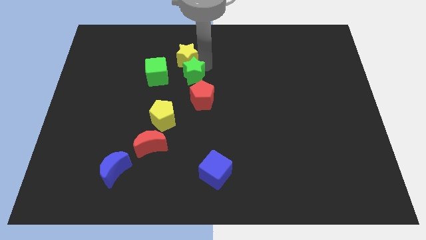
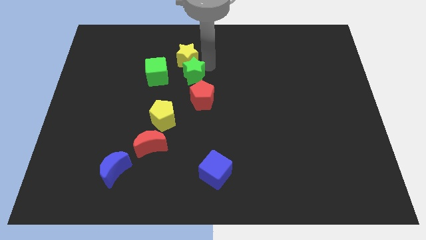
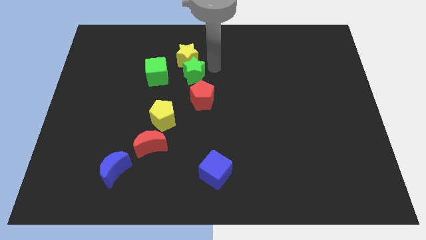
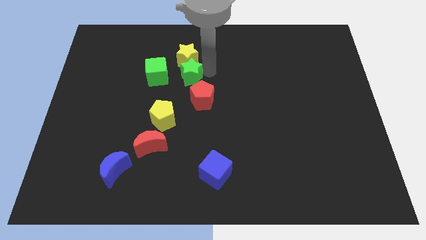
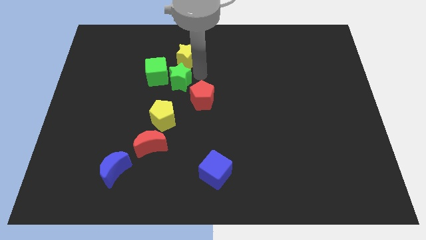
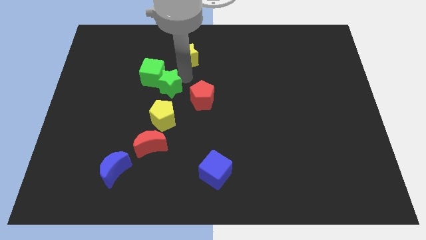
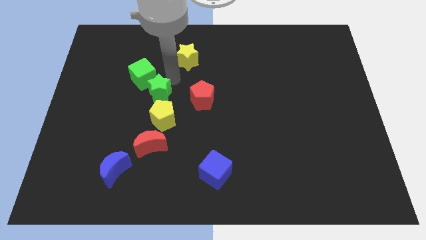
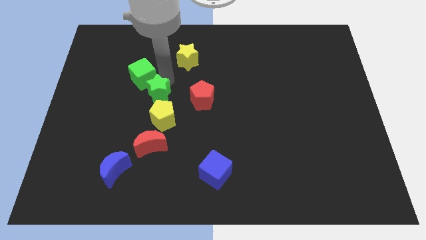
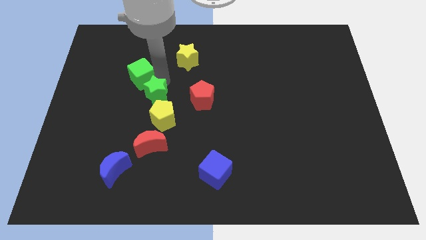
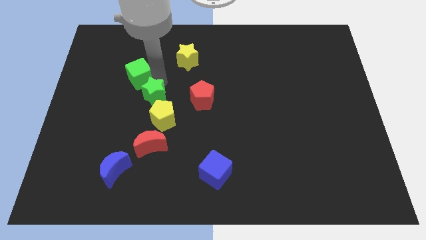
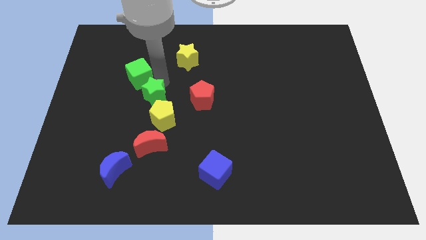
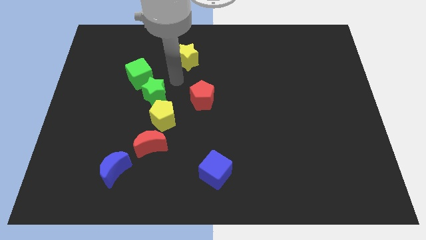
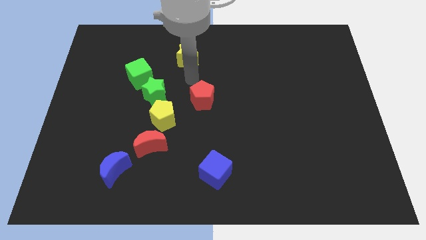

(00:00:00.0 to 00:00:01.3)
move the green star in between the green cube and yellow pentagon

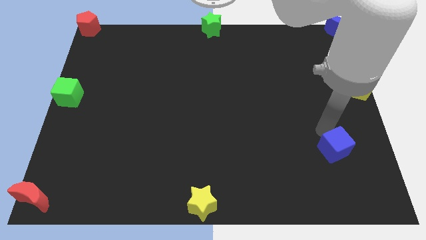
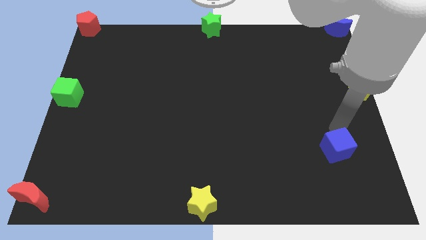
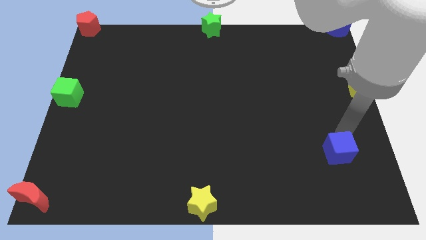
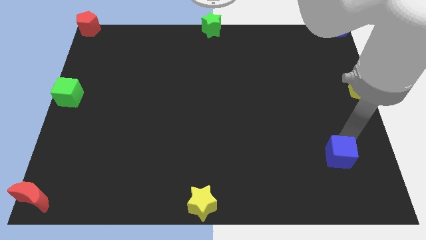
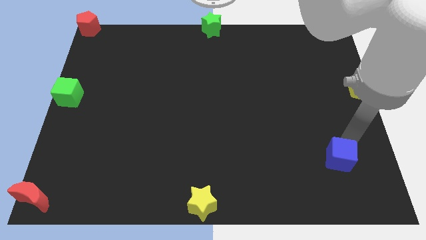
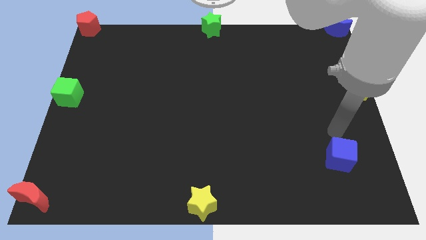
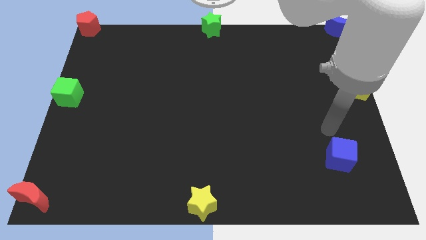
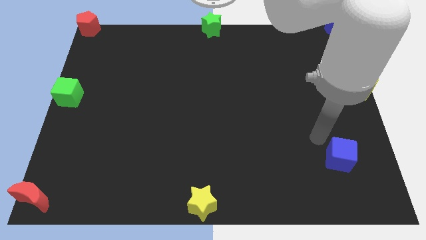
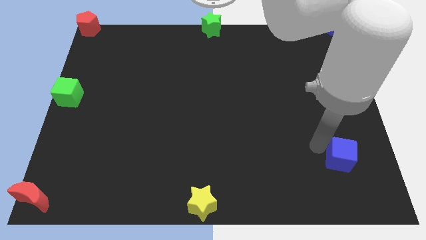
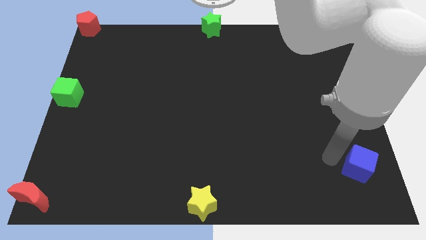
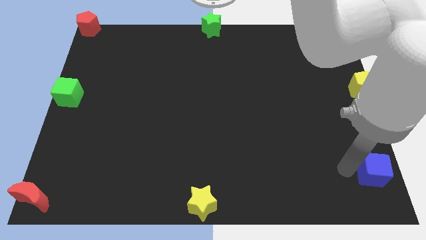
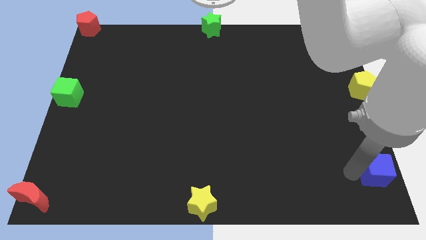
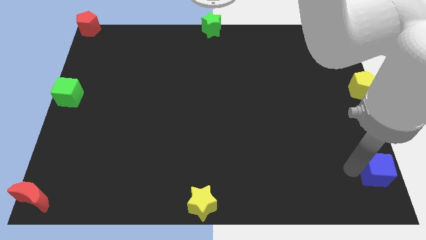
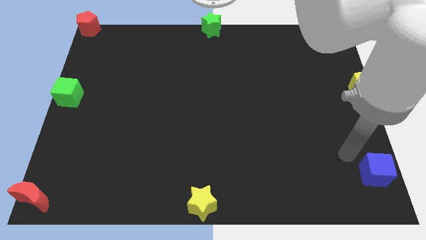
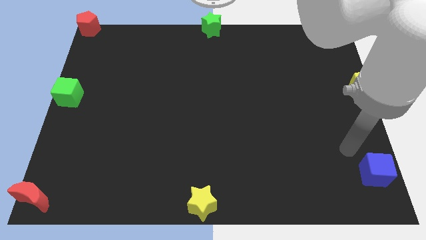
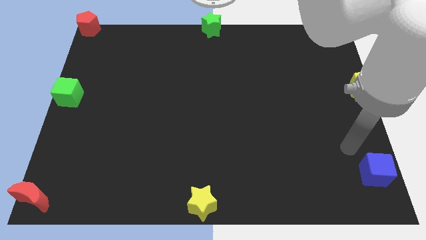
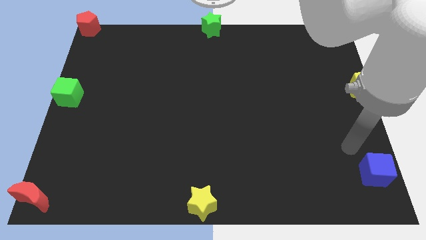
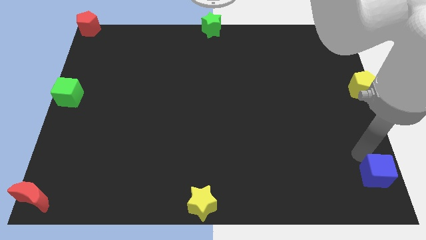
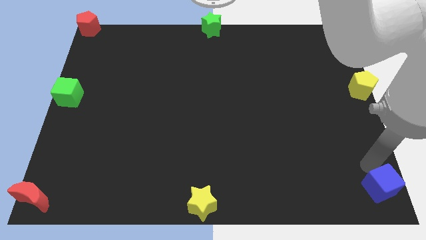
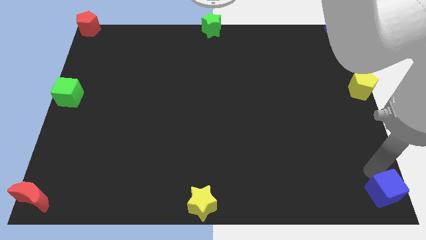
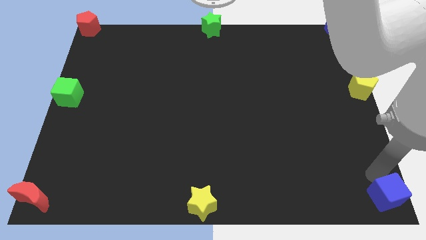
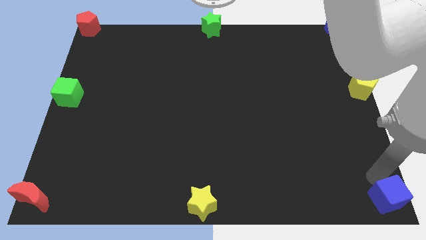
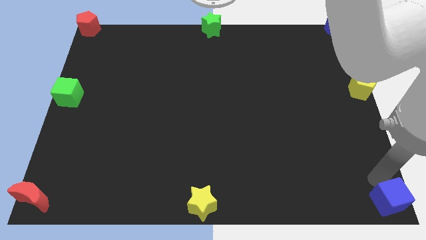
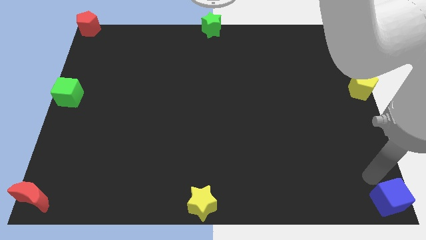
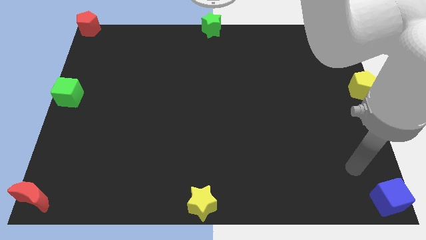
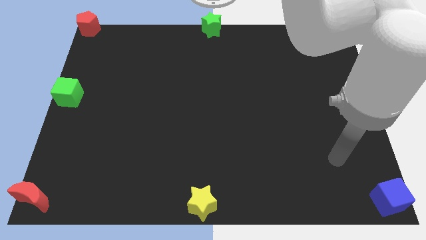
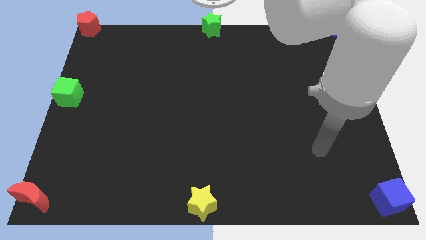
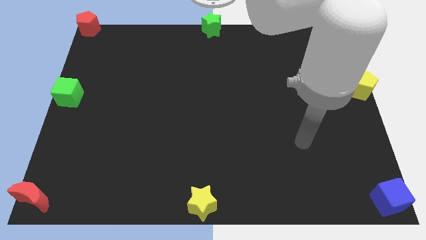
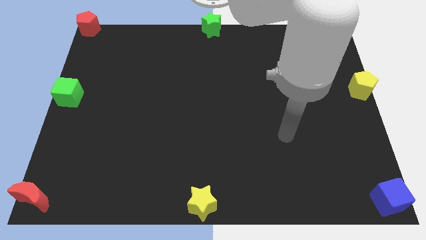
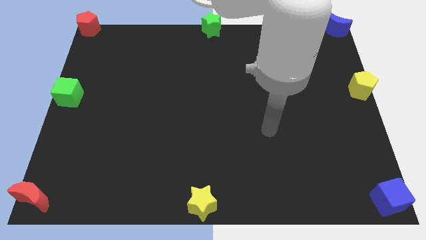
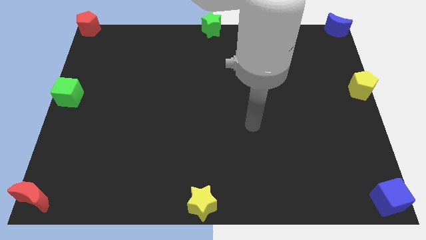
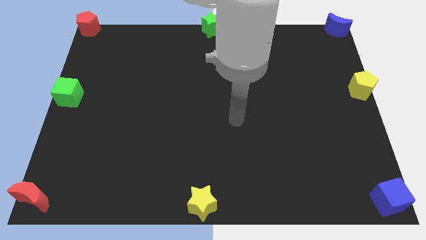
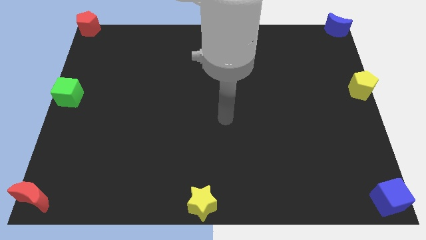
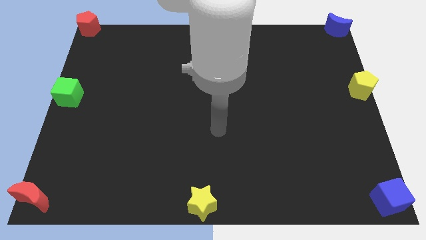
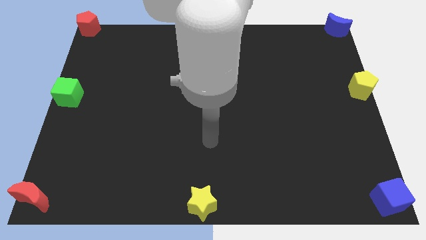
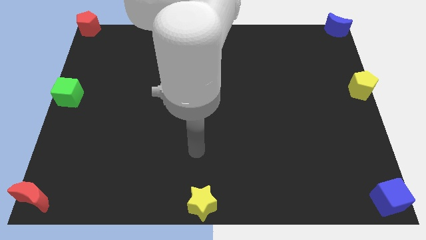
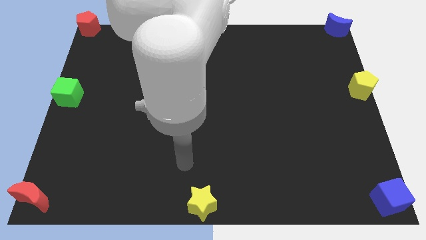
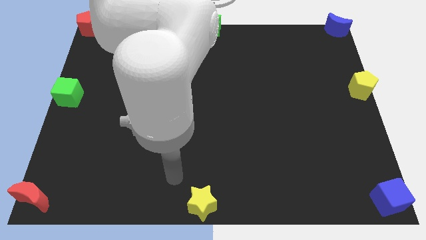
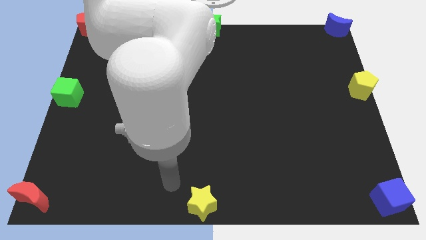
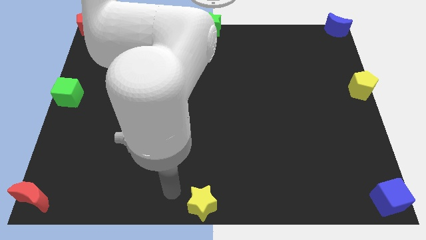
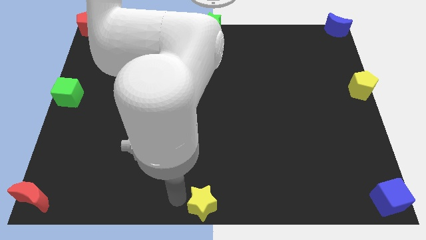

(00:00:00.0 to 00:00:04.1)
place the blue cube near the bottom right corner

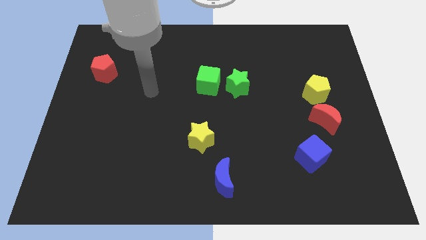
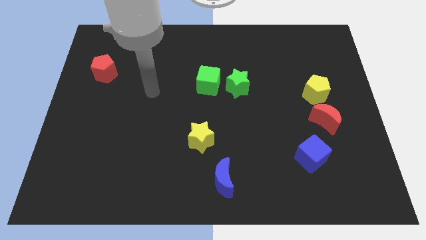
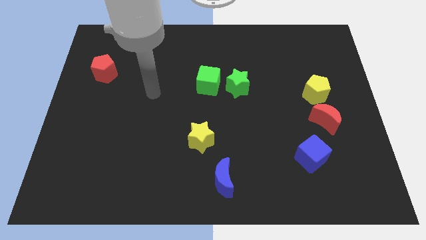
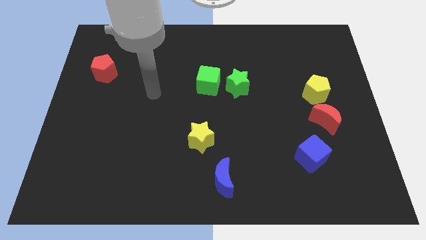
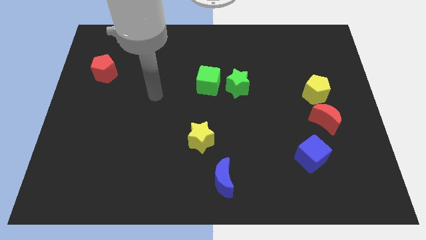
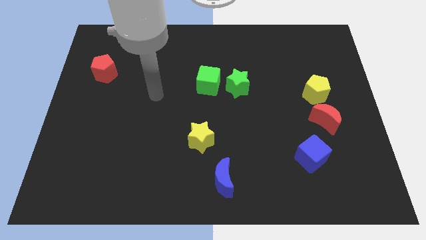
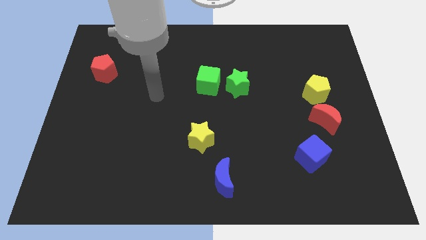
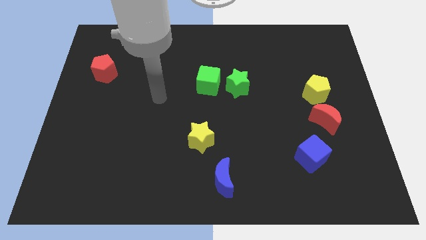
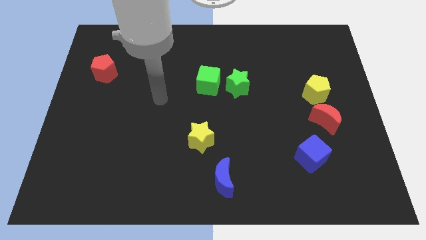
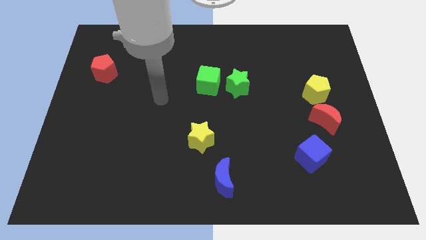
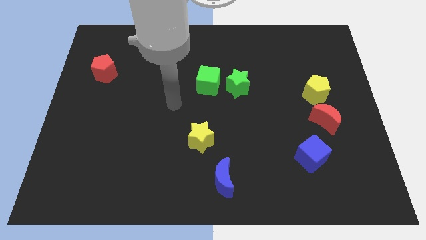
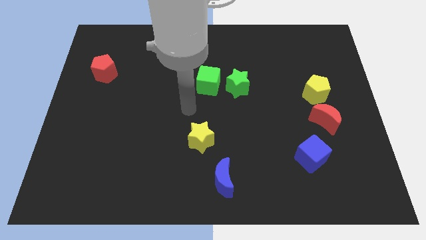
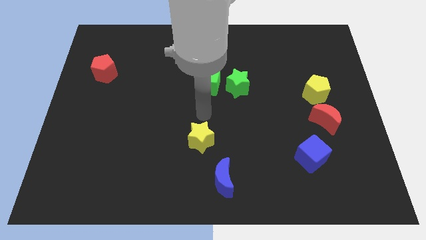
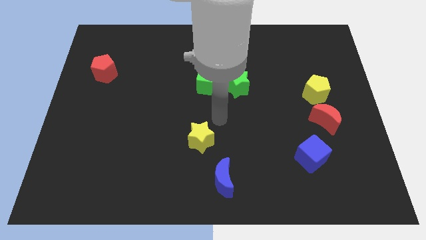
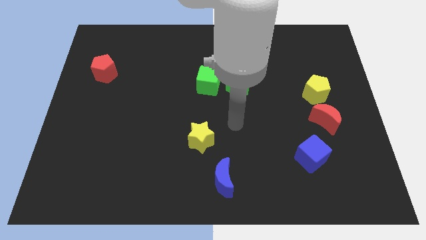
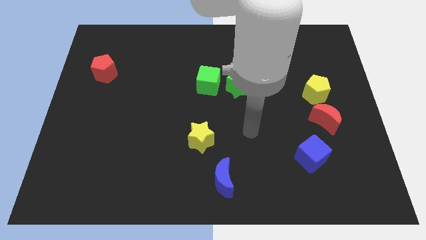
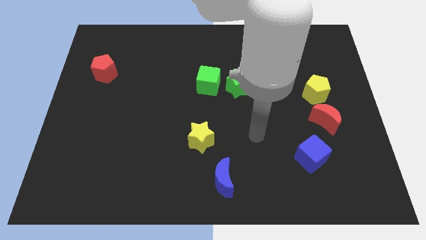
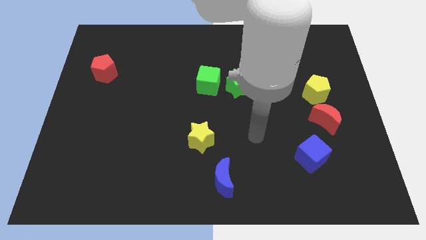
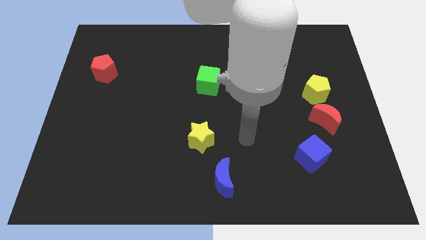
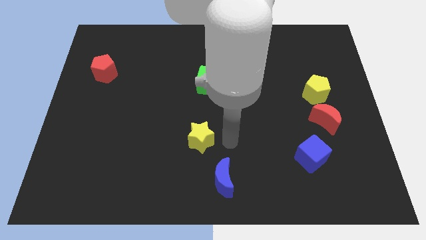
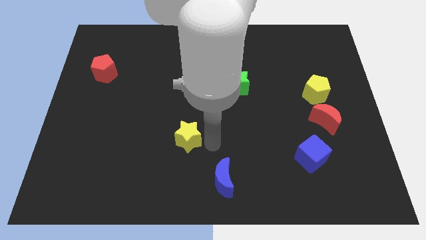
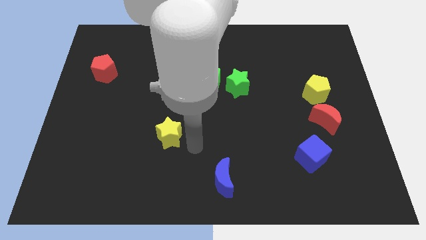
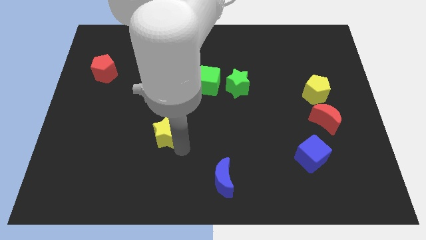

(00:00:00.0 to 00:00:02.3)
put the yellow star between the red pentagon and blue moon

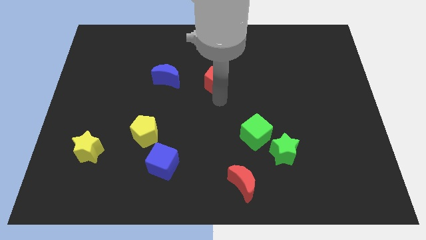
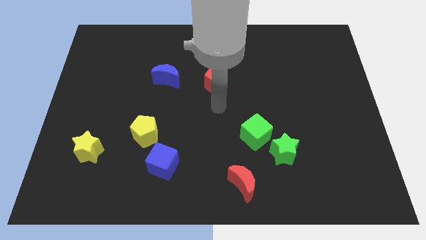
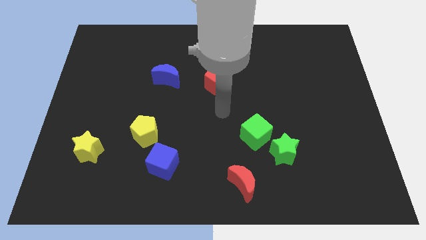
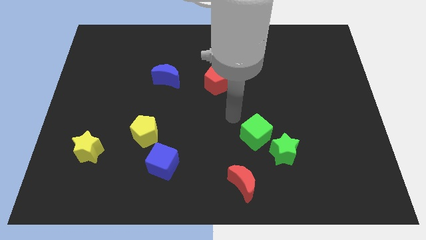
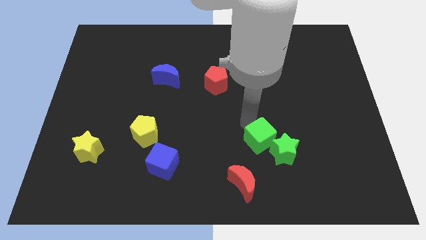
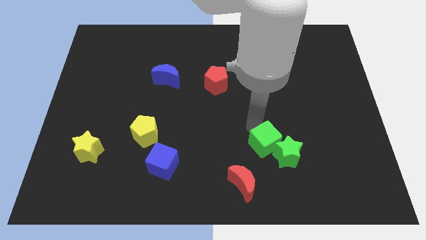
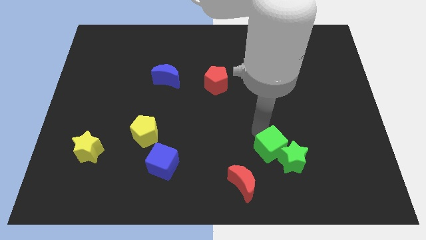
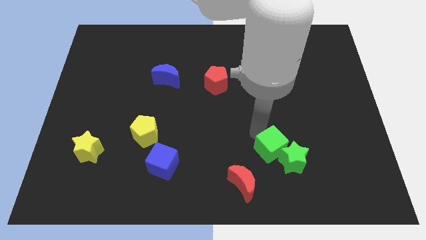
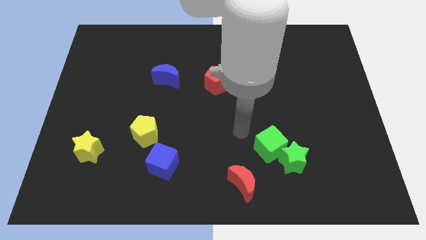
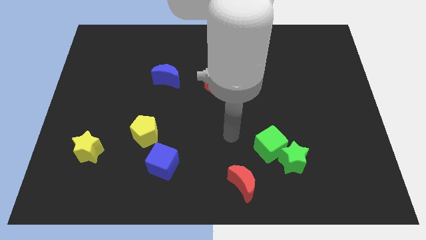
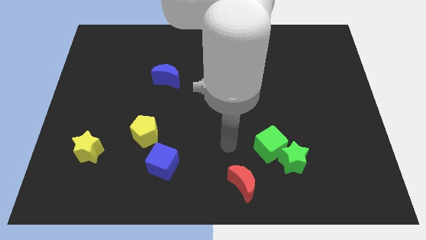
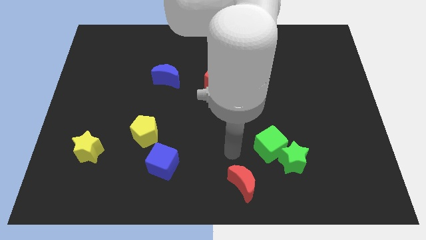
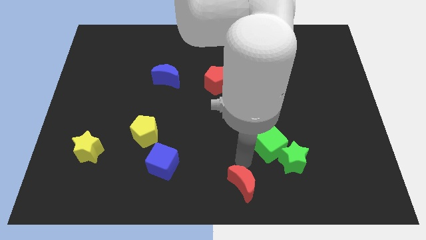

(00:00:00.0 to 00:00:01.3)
move the green cube into a green star
